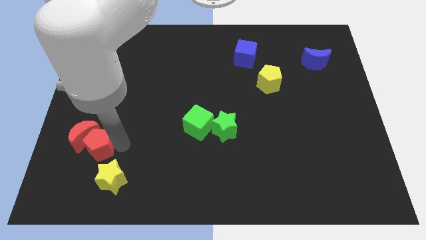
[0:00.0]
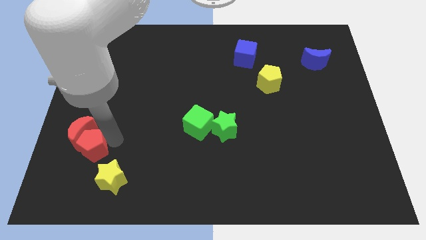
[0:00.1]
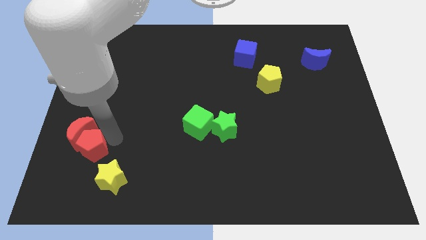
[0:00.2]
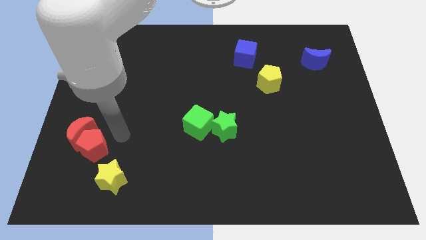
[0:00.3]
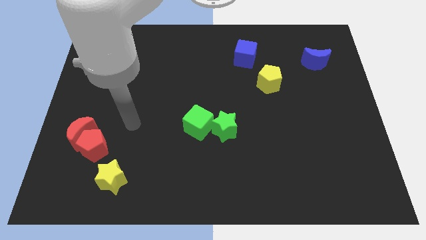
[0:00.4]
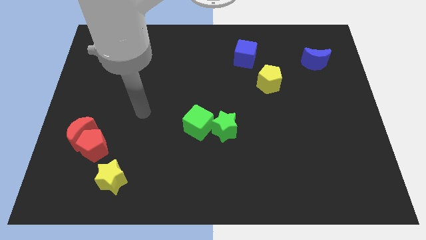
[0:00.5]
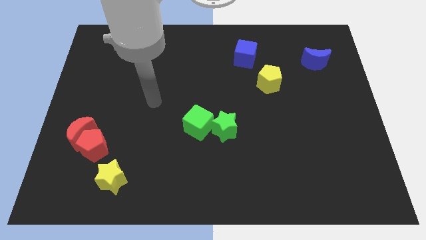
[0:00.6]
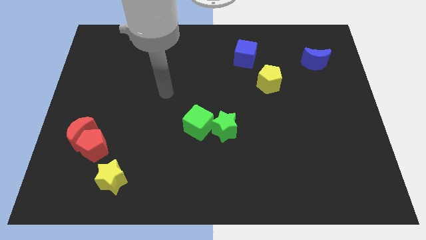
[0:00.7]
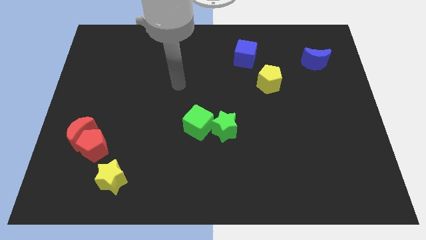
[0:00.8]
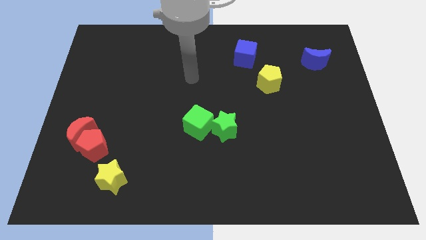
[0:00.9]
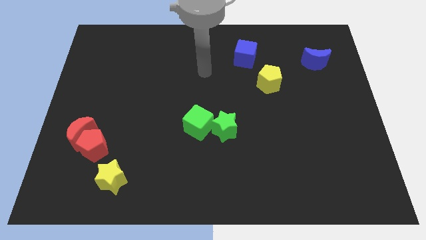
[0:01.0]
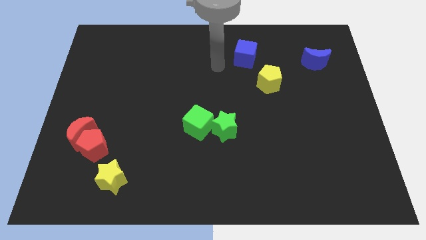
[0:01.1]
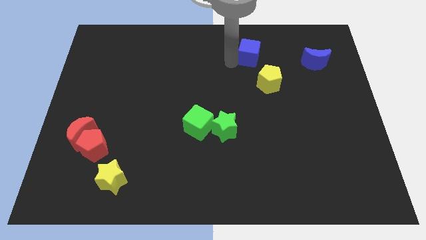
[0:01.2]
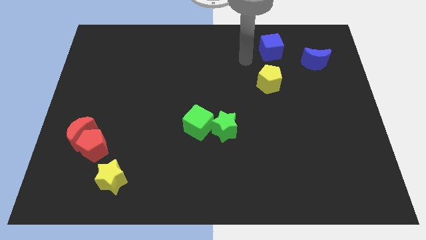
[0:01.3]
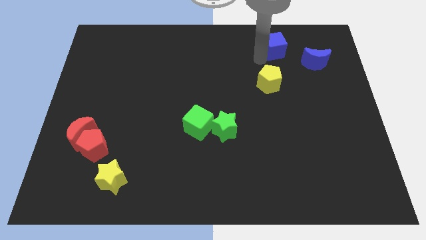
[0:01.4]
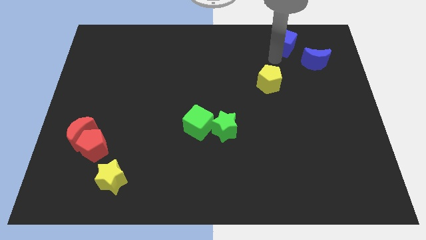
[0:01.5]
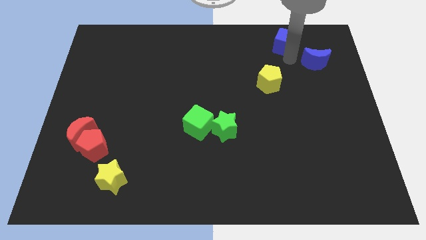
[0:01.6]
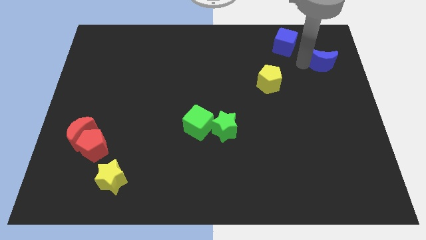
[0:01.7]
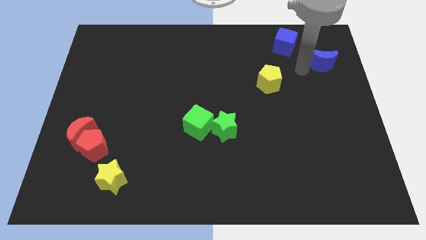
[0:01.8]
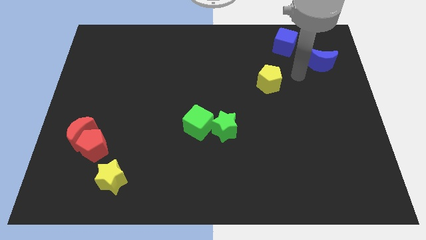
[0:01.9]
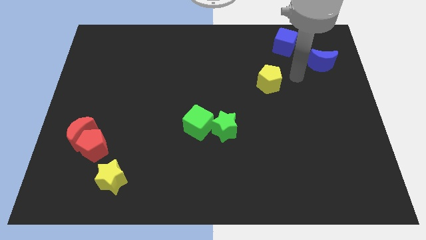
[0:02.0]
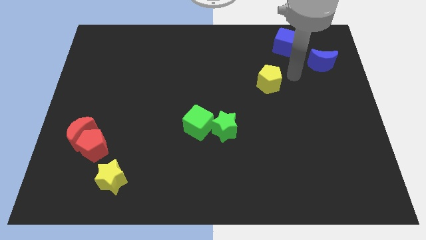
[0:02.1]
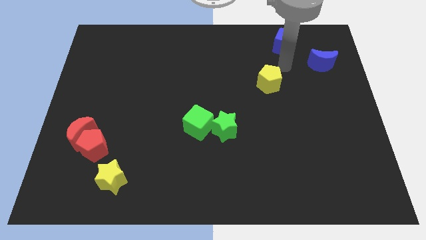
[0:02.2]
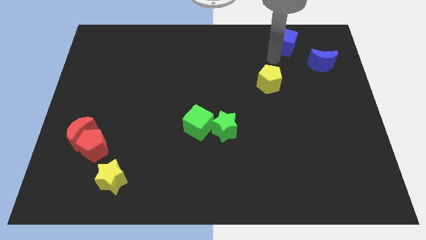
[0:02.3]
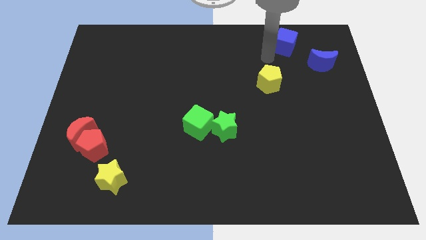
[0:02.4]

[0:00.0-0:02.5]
place your arm above the yellow pentagon

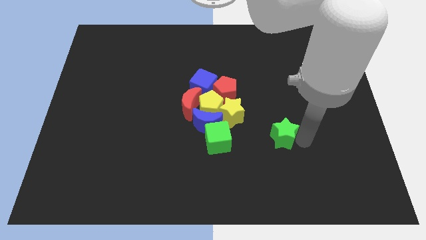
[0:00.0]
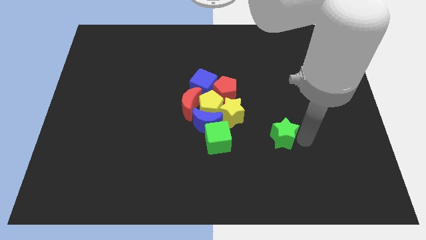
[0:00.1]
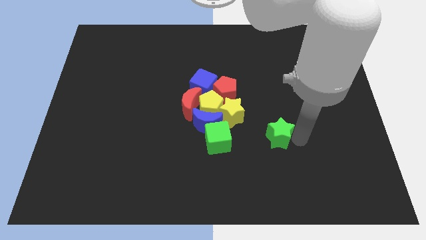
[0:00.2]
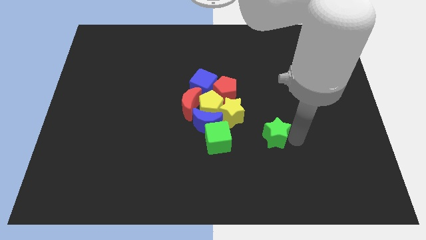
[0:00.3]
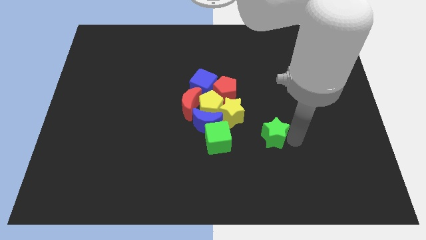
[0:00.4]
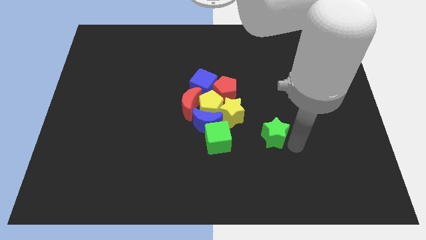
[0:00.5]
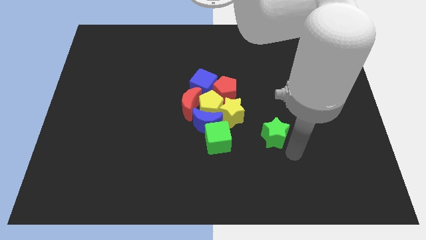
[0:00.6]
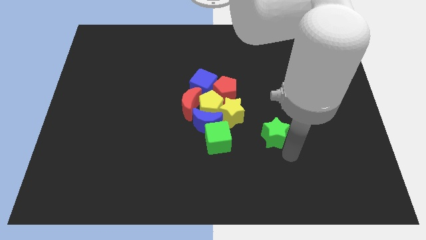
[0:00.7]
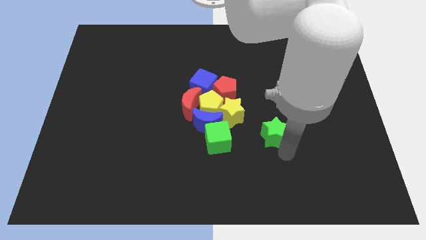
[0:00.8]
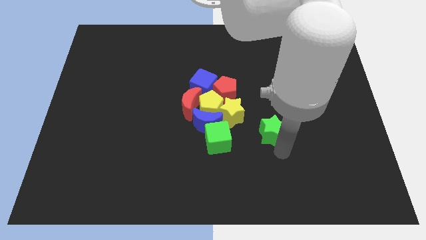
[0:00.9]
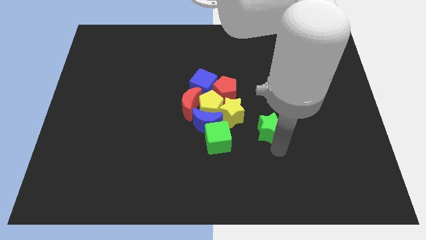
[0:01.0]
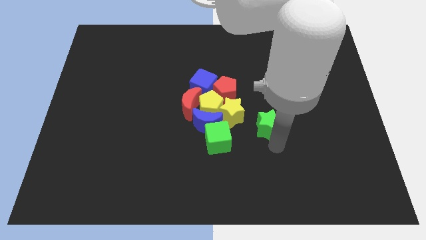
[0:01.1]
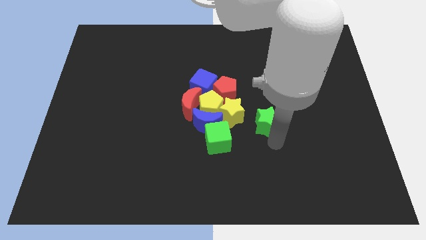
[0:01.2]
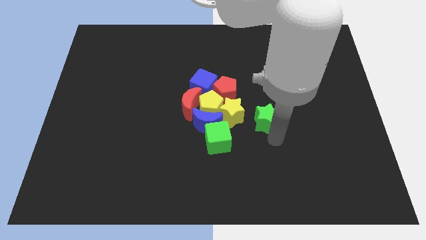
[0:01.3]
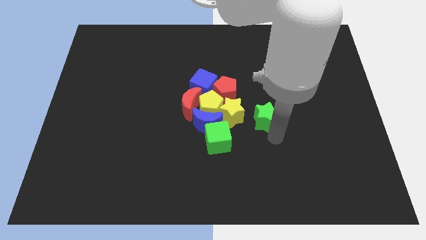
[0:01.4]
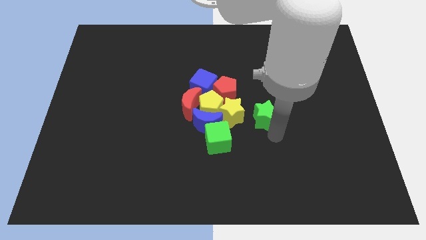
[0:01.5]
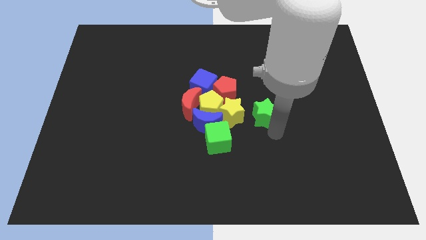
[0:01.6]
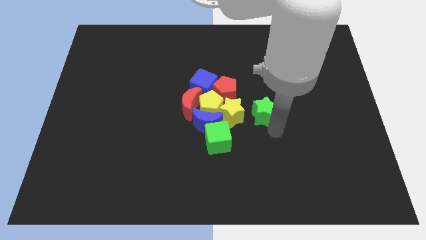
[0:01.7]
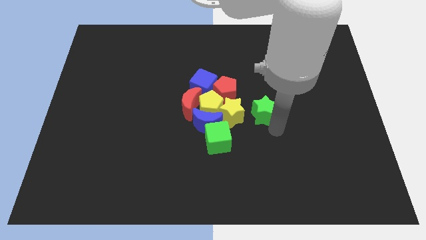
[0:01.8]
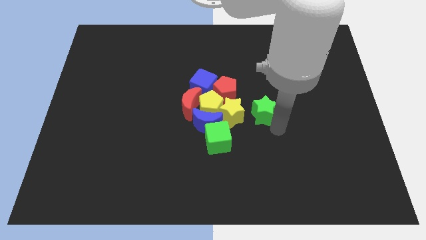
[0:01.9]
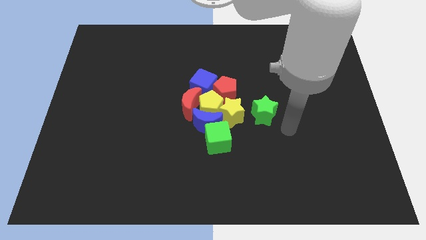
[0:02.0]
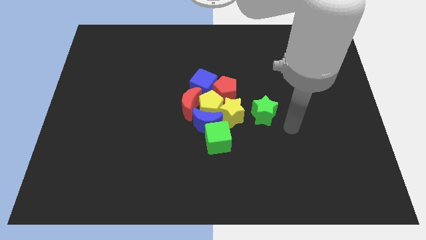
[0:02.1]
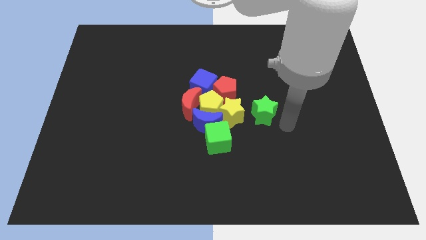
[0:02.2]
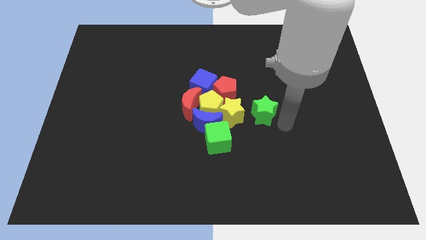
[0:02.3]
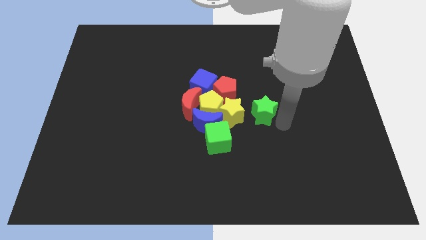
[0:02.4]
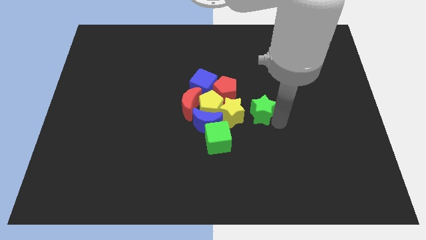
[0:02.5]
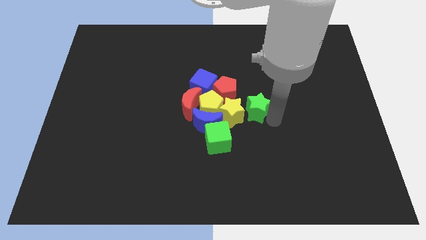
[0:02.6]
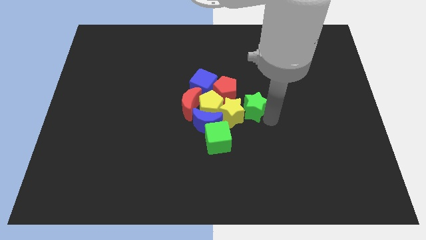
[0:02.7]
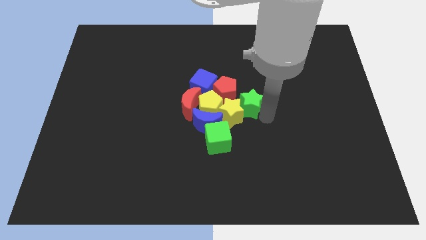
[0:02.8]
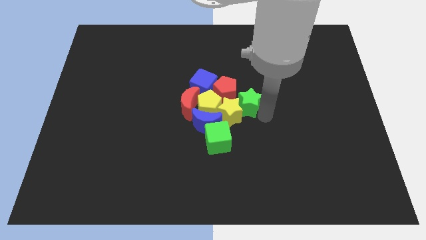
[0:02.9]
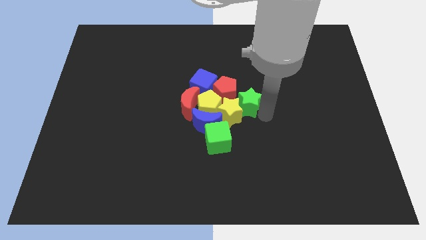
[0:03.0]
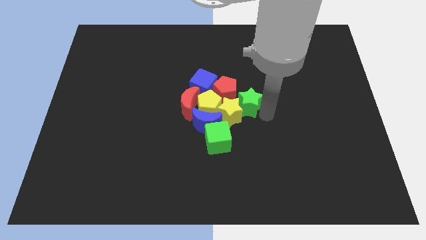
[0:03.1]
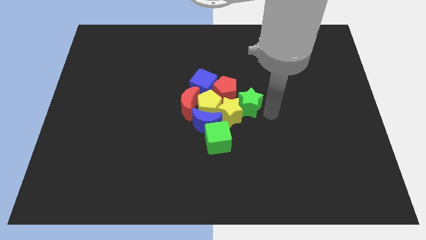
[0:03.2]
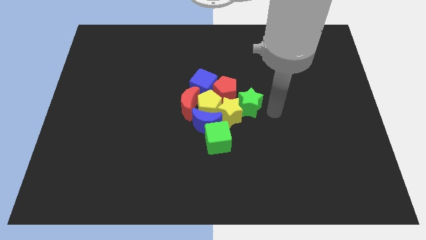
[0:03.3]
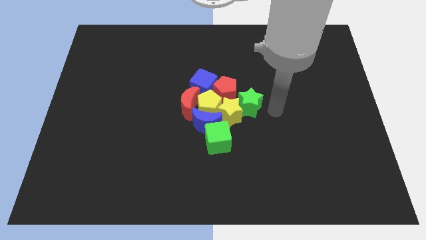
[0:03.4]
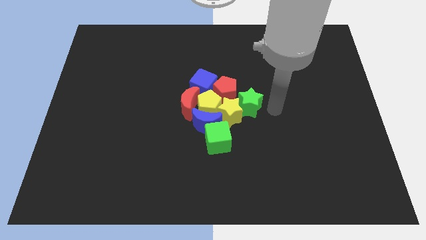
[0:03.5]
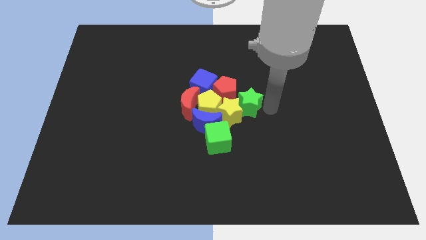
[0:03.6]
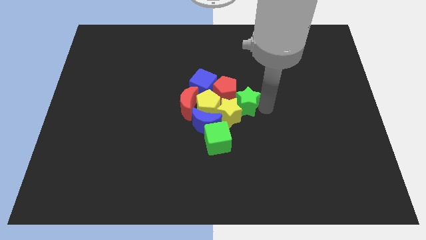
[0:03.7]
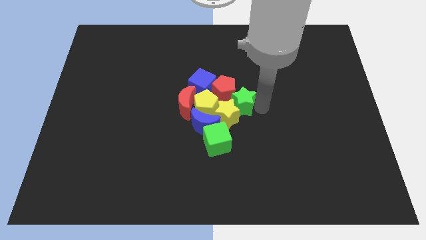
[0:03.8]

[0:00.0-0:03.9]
move green star into the yellow star

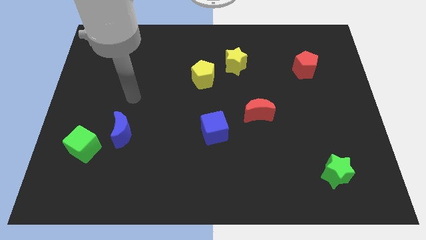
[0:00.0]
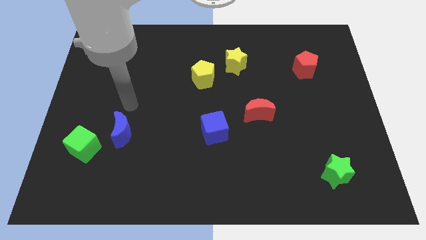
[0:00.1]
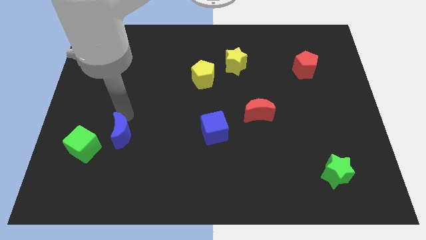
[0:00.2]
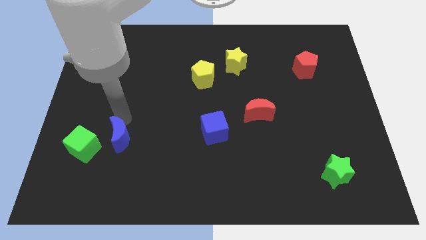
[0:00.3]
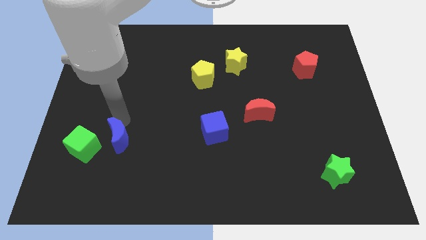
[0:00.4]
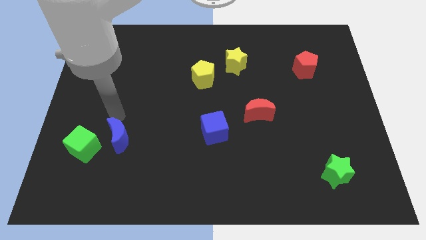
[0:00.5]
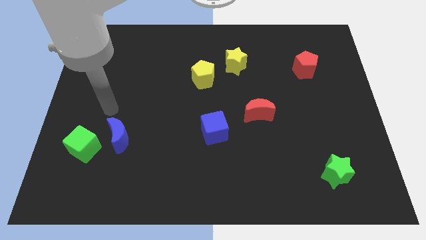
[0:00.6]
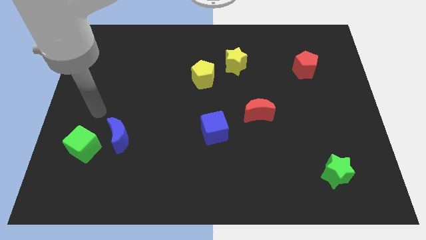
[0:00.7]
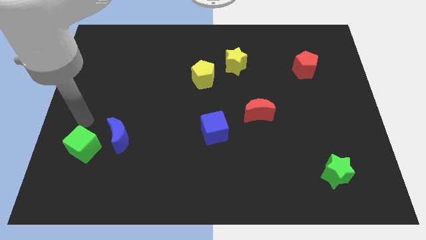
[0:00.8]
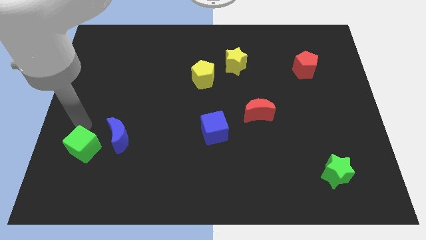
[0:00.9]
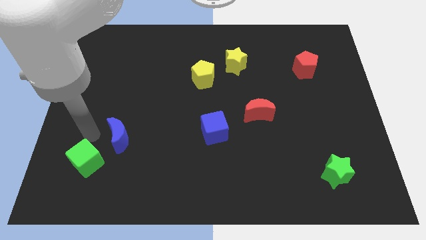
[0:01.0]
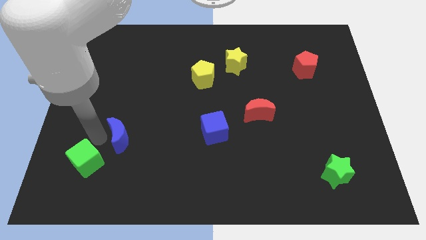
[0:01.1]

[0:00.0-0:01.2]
push the blue crescent towards the green cube

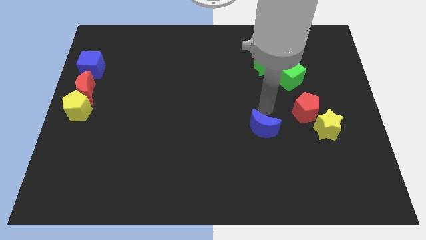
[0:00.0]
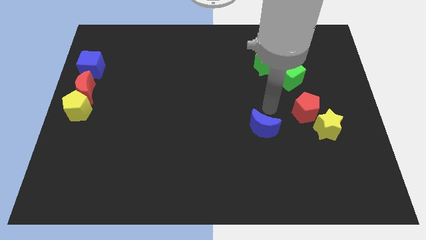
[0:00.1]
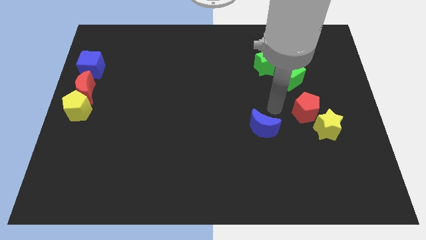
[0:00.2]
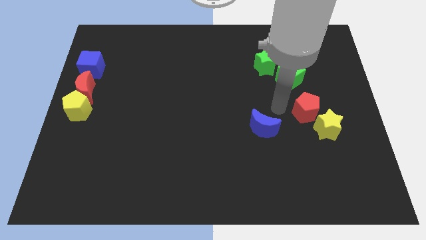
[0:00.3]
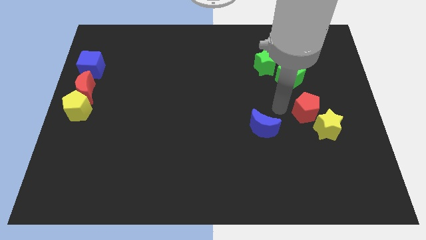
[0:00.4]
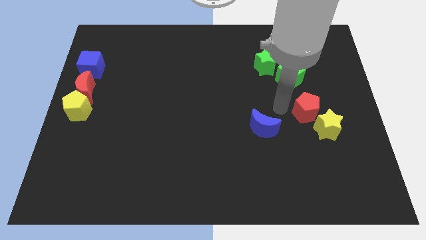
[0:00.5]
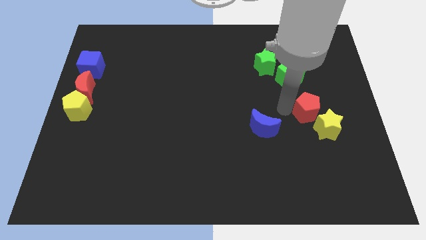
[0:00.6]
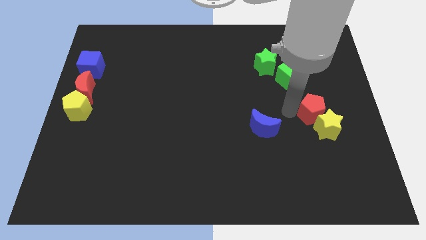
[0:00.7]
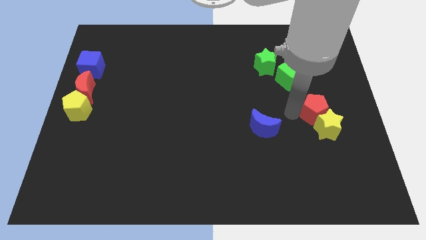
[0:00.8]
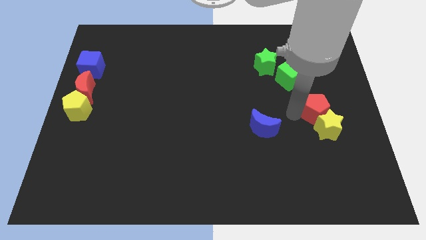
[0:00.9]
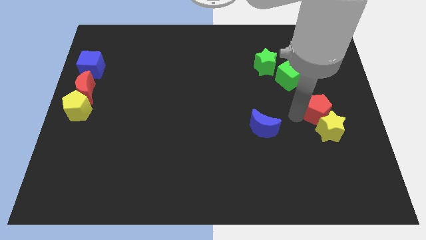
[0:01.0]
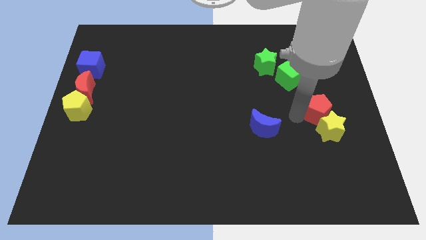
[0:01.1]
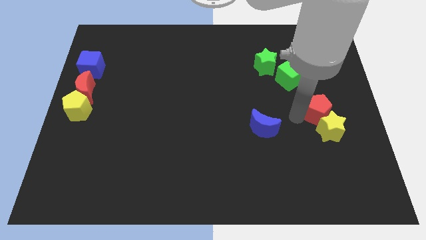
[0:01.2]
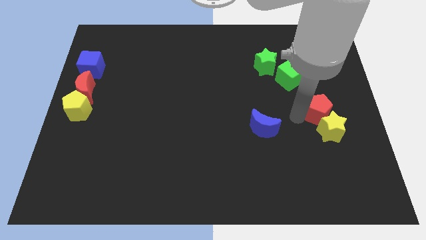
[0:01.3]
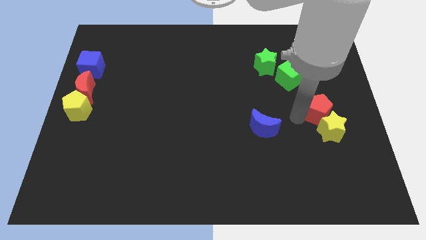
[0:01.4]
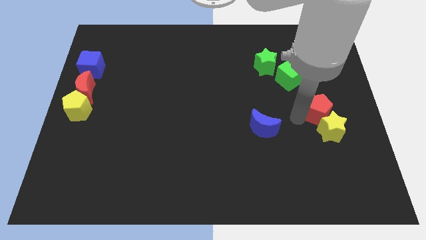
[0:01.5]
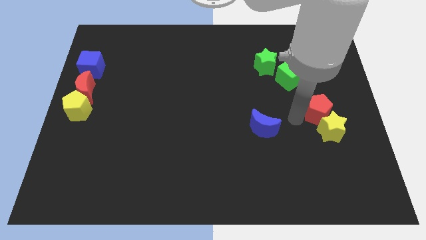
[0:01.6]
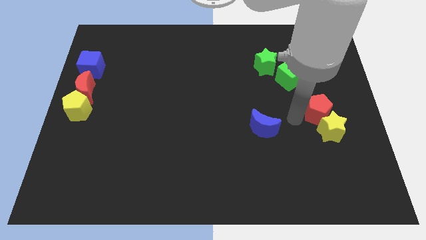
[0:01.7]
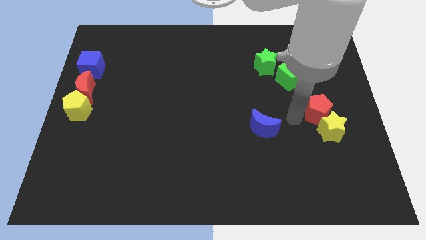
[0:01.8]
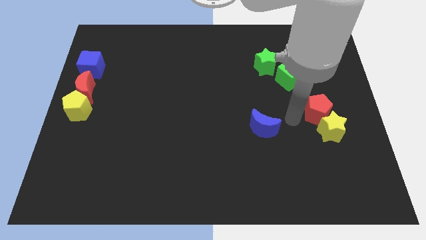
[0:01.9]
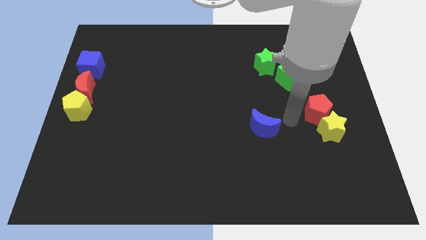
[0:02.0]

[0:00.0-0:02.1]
move the red pentagon into yellow star
